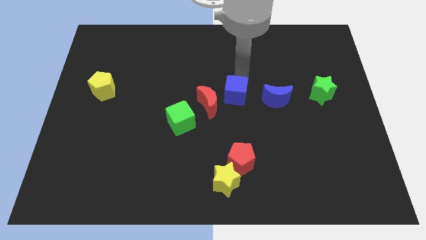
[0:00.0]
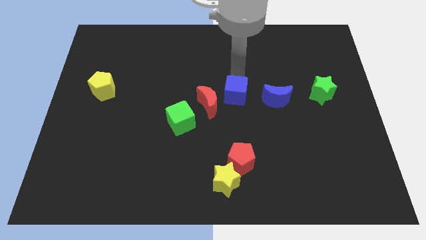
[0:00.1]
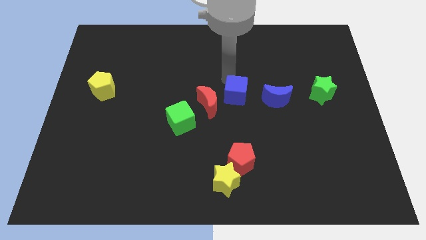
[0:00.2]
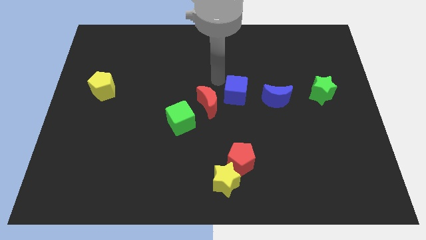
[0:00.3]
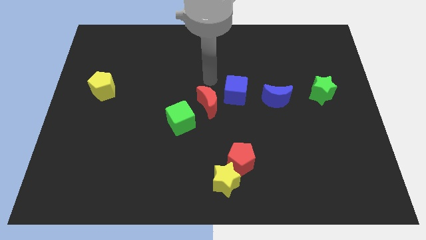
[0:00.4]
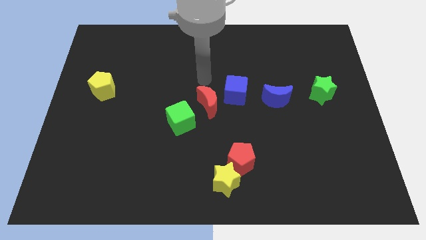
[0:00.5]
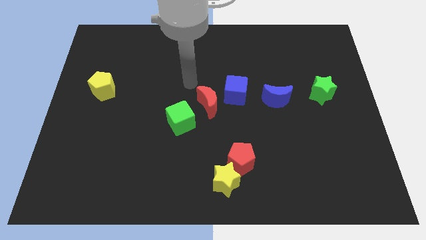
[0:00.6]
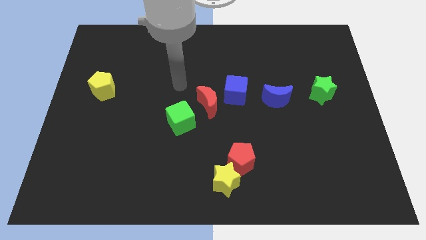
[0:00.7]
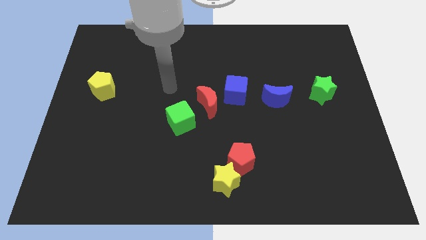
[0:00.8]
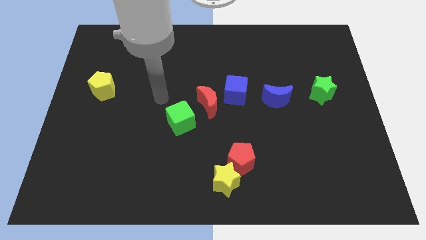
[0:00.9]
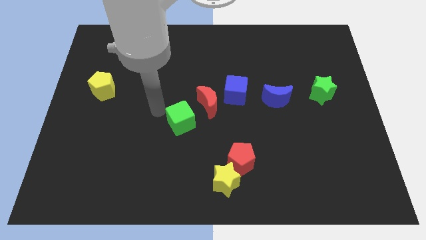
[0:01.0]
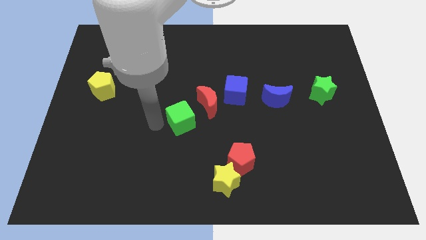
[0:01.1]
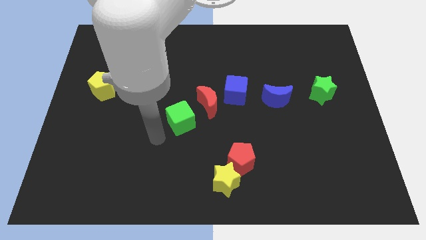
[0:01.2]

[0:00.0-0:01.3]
point your arm to the left side of the green cube

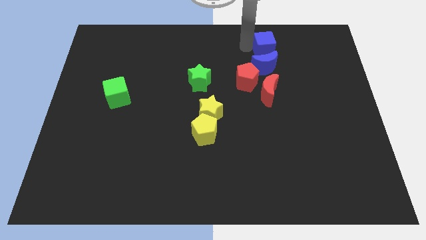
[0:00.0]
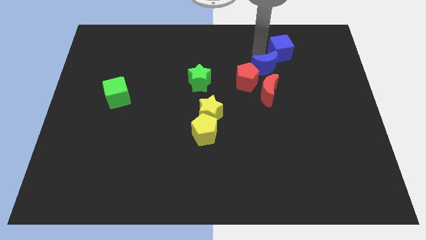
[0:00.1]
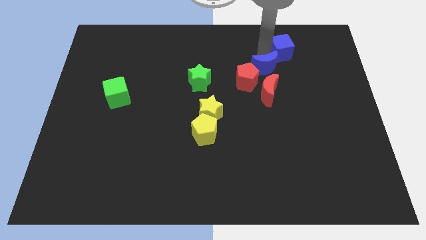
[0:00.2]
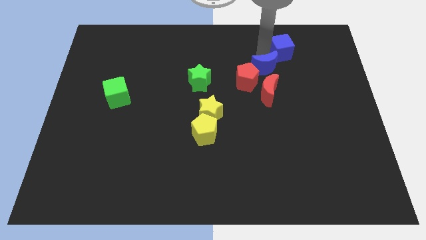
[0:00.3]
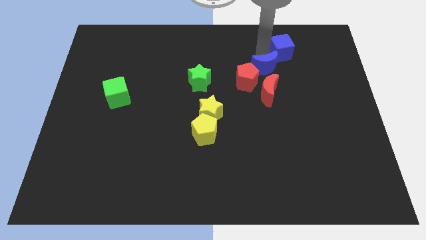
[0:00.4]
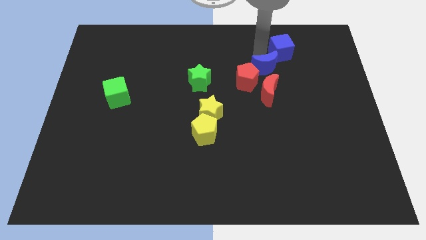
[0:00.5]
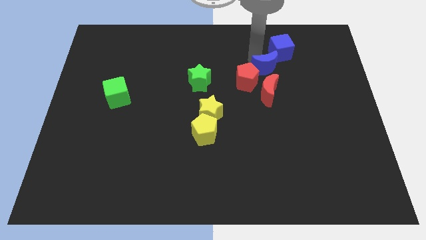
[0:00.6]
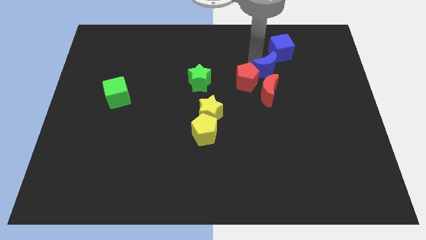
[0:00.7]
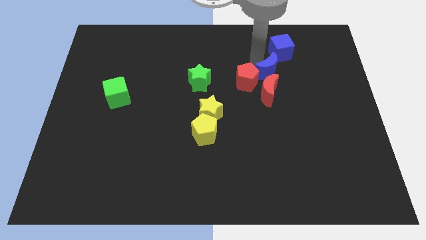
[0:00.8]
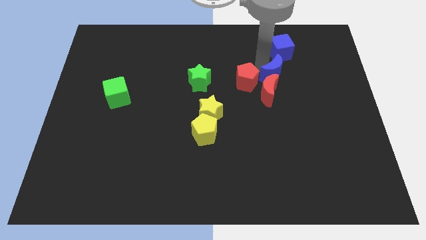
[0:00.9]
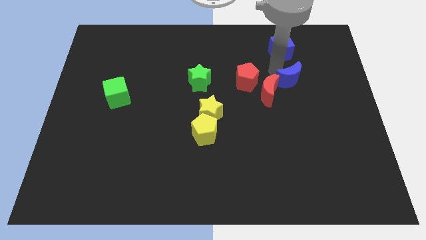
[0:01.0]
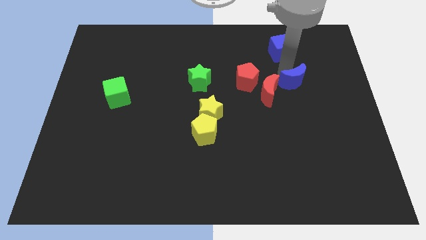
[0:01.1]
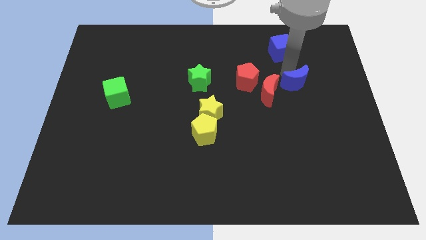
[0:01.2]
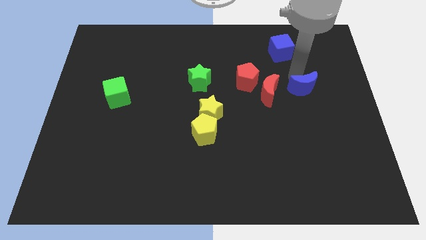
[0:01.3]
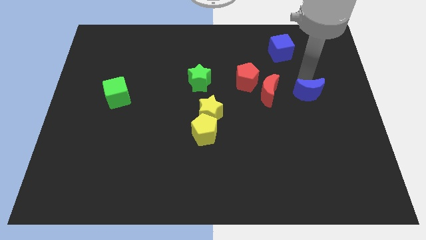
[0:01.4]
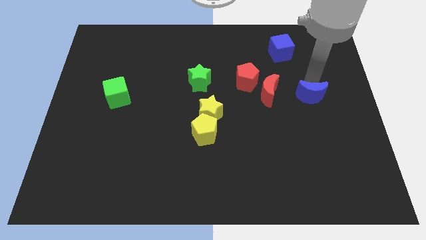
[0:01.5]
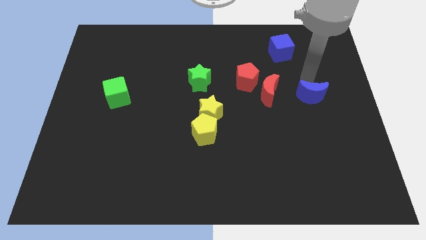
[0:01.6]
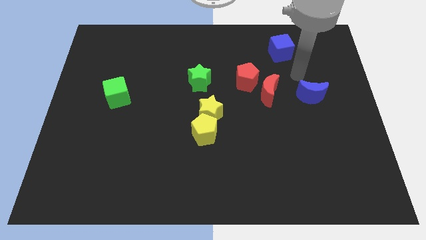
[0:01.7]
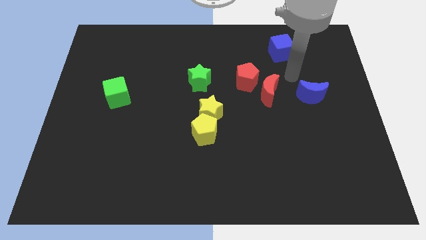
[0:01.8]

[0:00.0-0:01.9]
put the blue moon to the right side of the red crescent

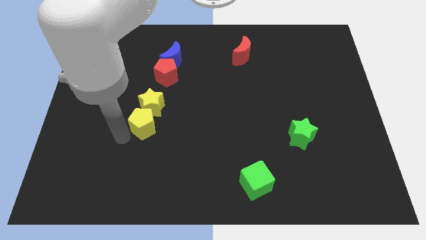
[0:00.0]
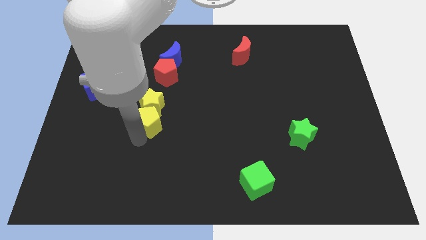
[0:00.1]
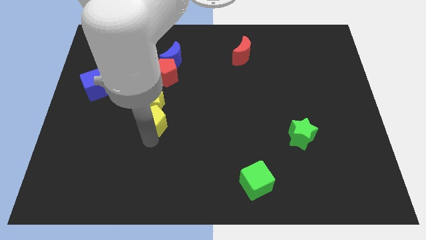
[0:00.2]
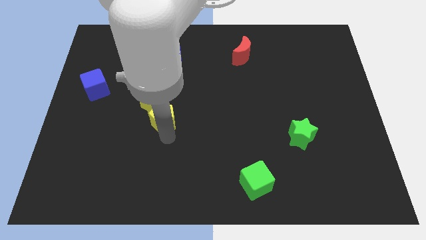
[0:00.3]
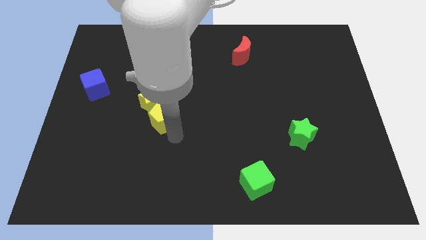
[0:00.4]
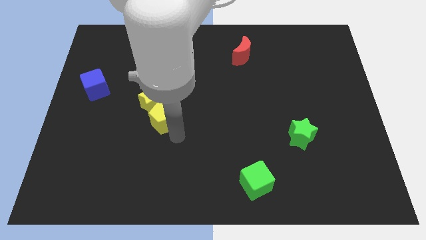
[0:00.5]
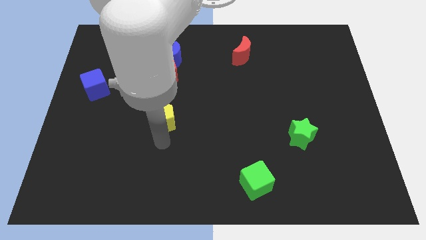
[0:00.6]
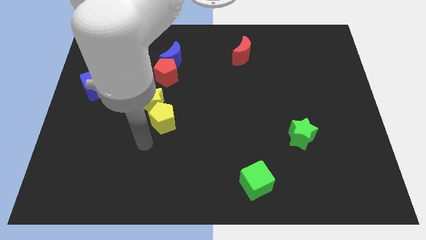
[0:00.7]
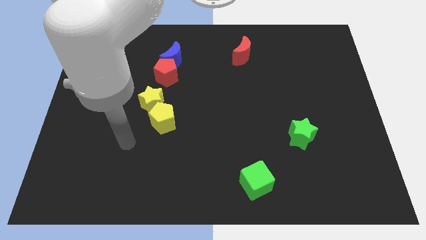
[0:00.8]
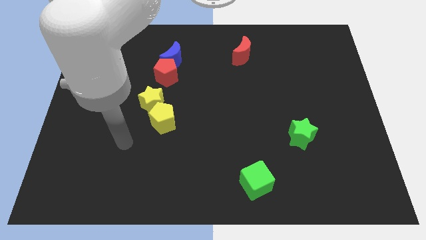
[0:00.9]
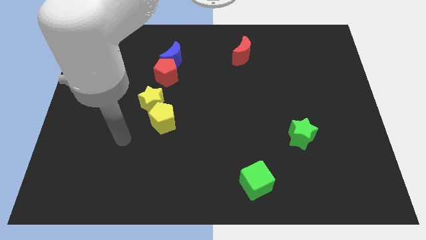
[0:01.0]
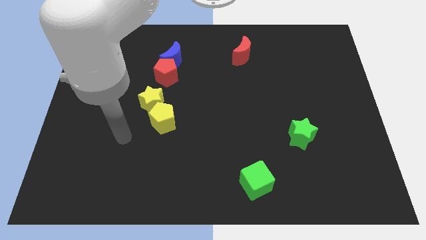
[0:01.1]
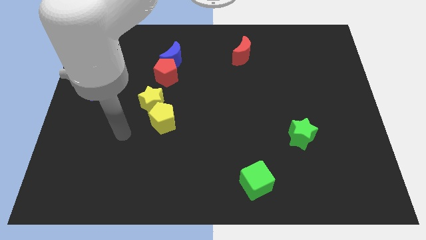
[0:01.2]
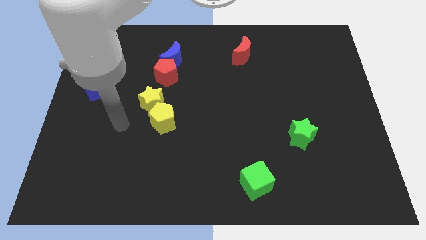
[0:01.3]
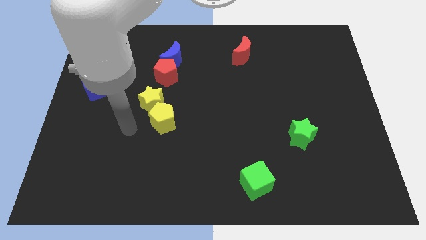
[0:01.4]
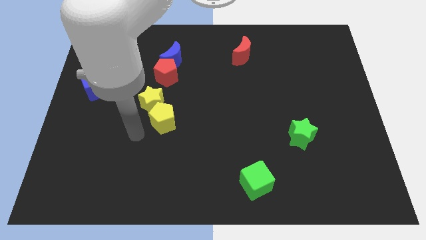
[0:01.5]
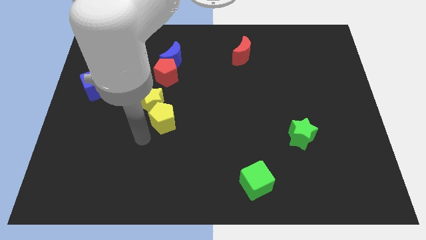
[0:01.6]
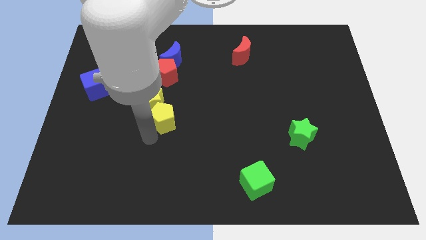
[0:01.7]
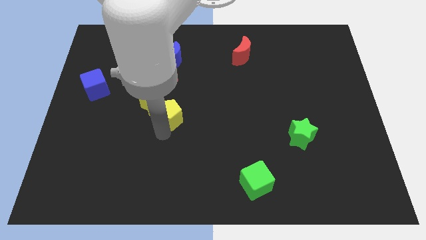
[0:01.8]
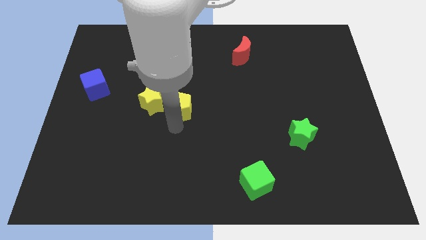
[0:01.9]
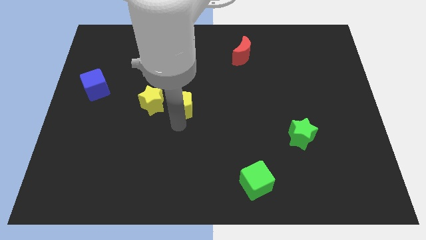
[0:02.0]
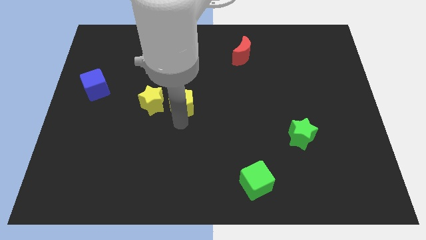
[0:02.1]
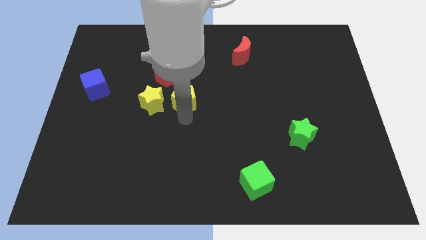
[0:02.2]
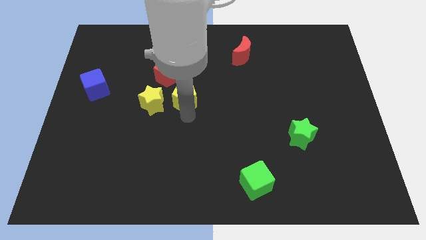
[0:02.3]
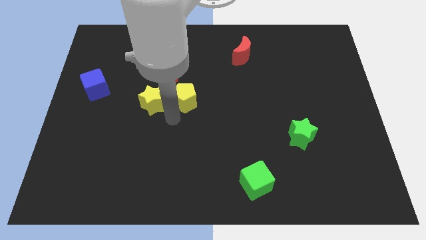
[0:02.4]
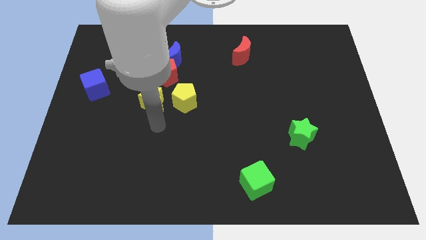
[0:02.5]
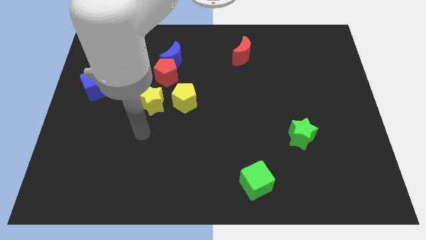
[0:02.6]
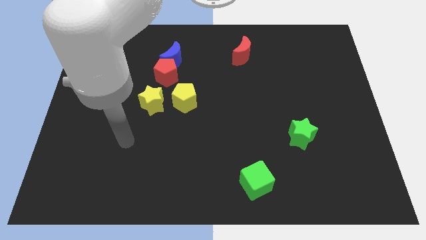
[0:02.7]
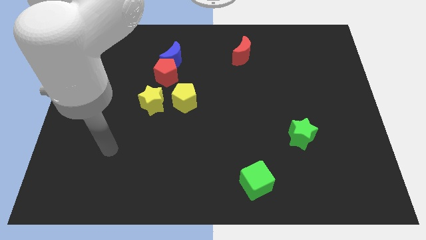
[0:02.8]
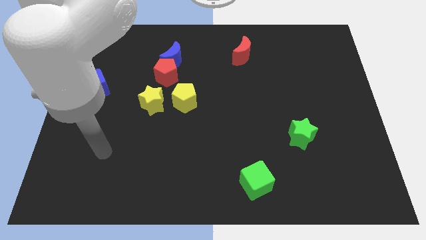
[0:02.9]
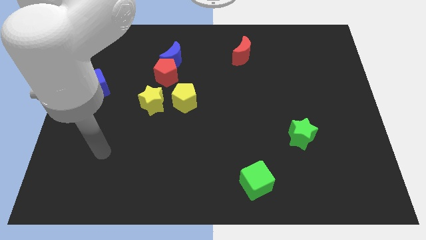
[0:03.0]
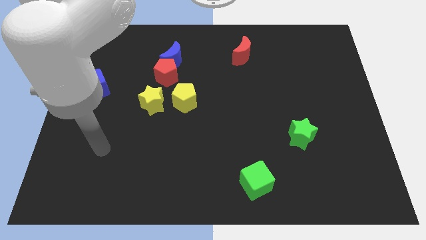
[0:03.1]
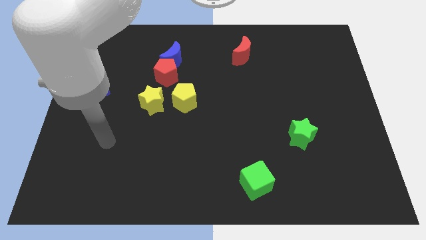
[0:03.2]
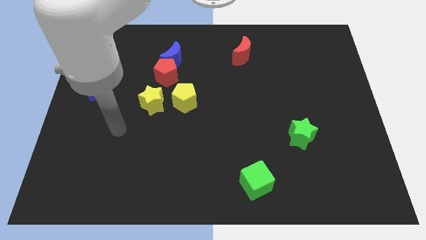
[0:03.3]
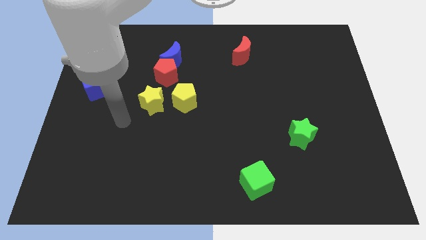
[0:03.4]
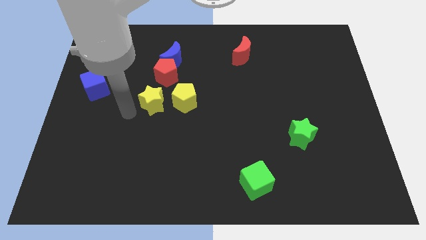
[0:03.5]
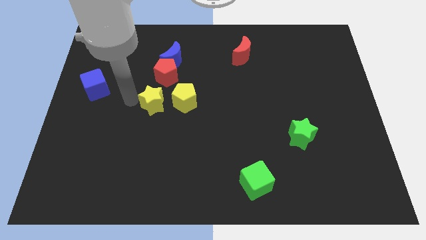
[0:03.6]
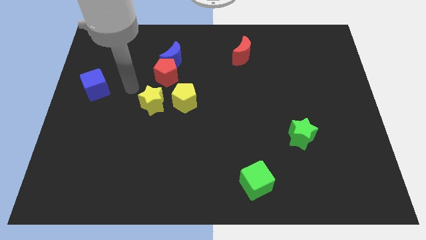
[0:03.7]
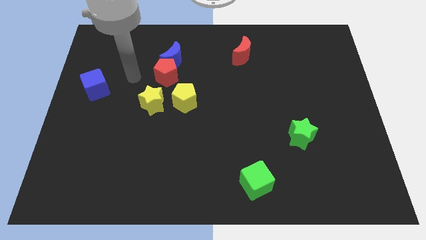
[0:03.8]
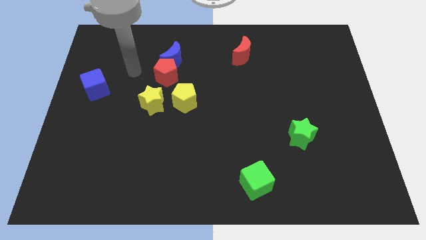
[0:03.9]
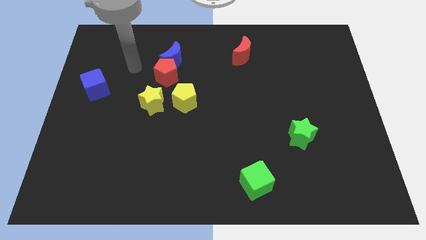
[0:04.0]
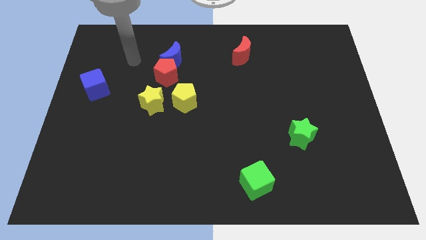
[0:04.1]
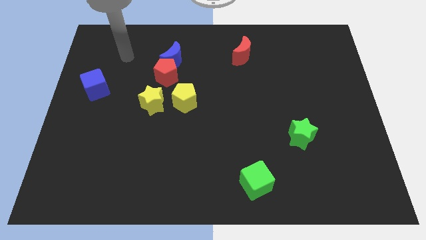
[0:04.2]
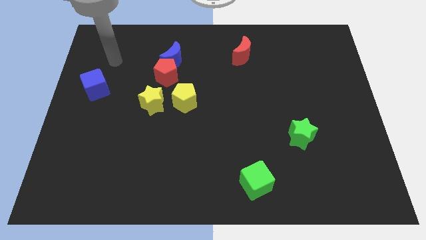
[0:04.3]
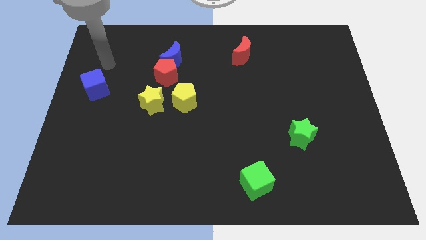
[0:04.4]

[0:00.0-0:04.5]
slide the yellow pentagon parallel right to the yellow star

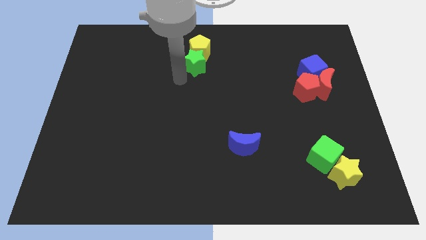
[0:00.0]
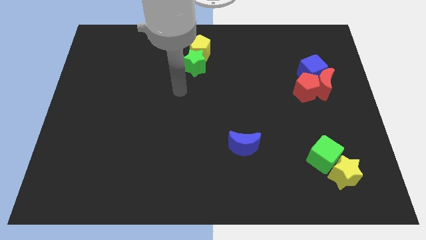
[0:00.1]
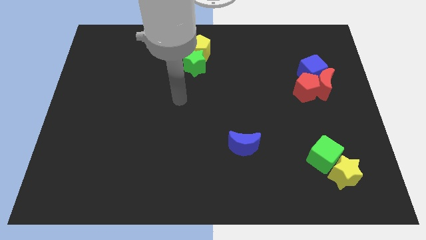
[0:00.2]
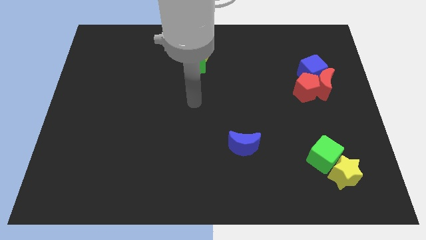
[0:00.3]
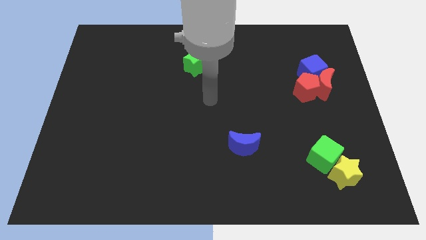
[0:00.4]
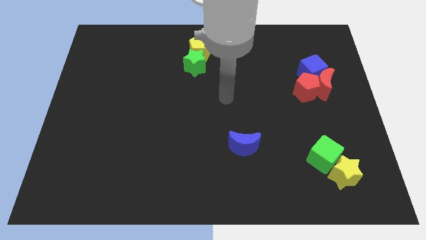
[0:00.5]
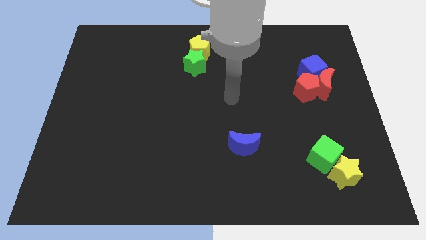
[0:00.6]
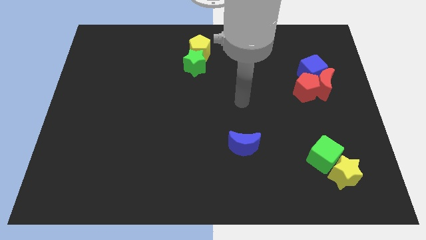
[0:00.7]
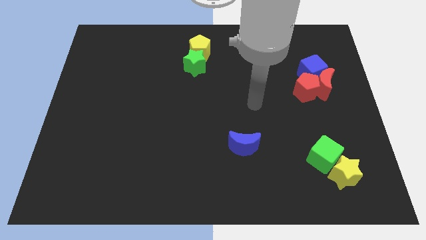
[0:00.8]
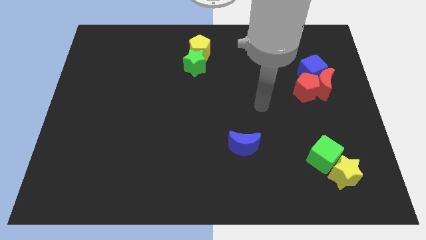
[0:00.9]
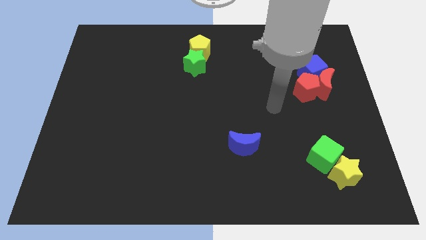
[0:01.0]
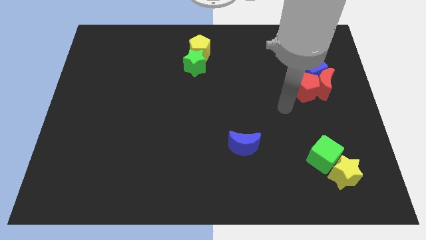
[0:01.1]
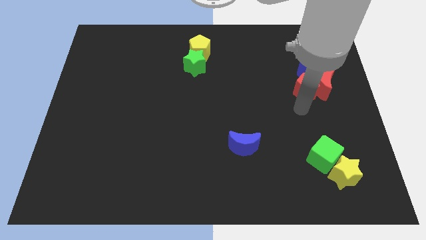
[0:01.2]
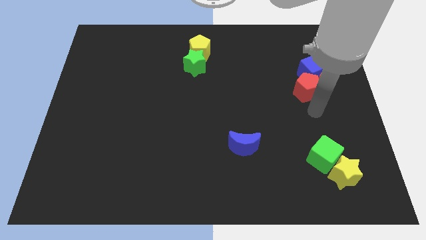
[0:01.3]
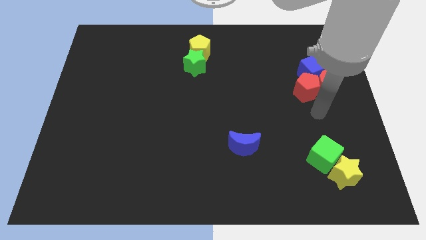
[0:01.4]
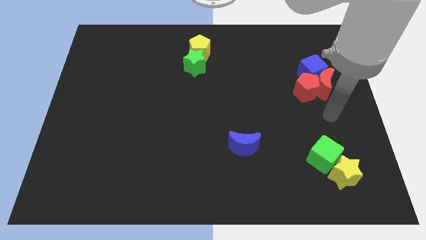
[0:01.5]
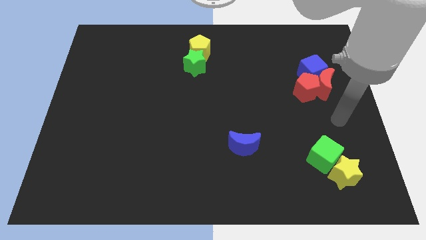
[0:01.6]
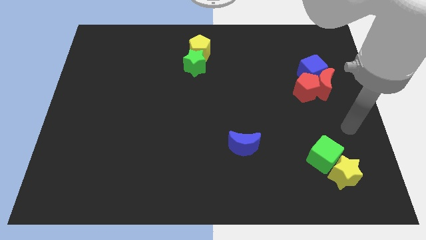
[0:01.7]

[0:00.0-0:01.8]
go away from the green star
